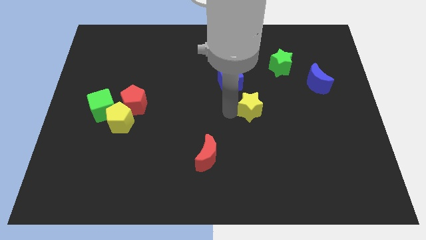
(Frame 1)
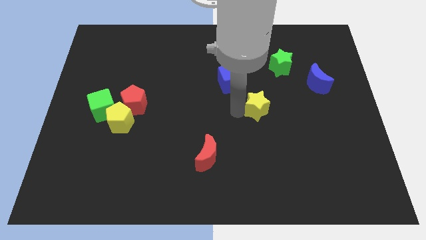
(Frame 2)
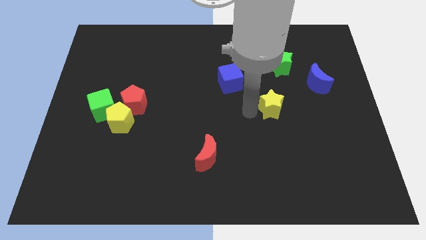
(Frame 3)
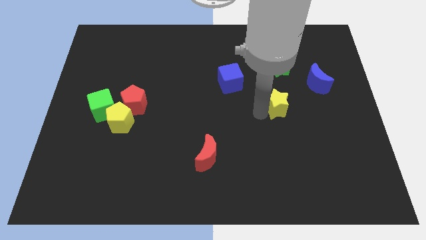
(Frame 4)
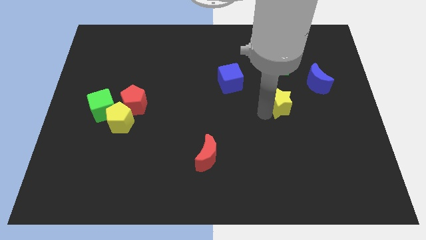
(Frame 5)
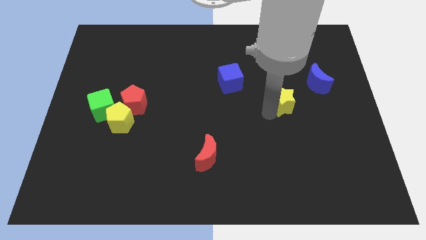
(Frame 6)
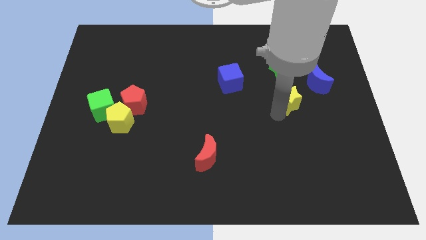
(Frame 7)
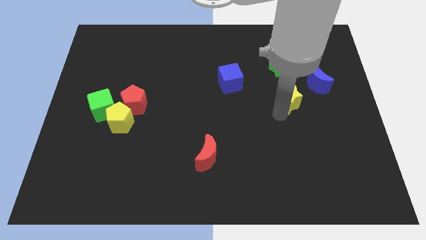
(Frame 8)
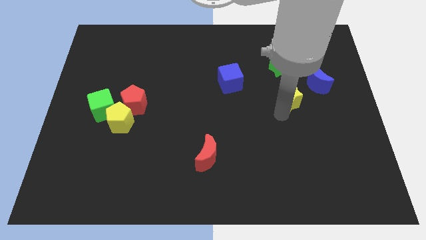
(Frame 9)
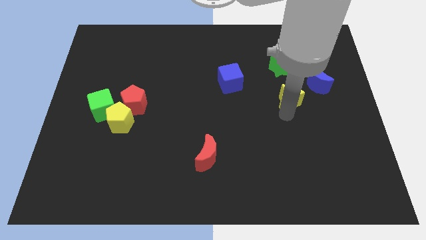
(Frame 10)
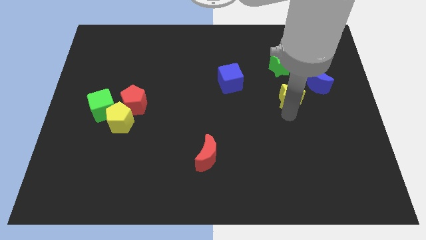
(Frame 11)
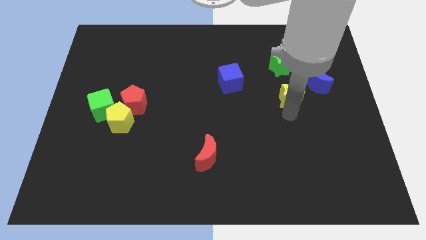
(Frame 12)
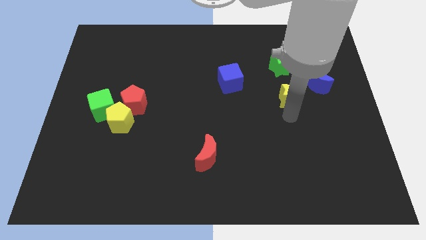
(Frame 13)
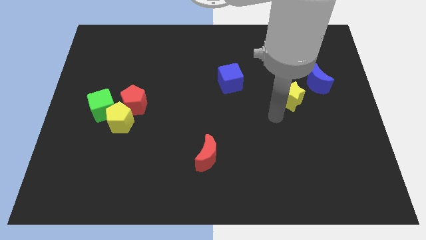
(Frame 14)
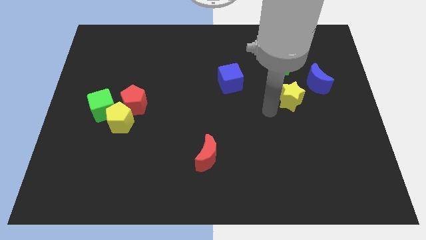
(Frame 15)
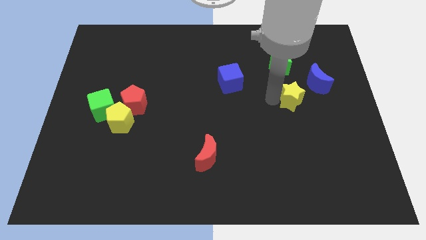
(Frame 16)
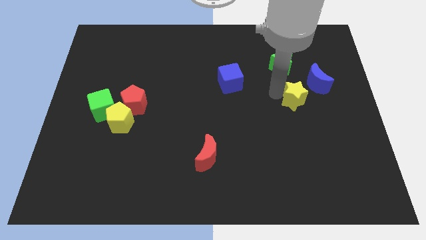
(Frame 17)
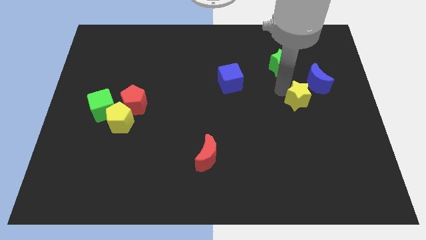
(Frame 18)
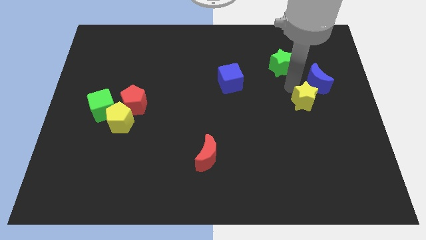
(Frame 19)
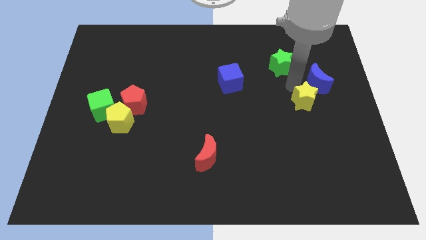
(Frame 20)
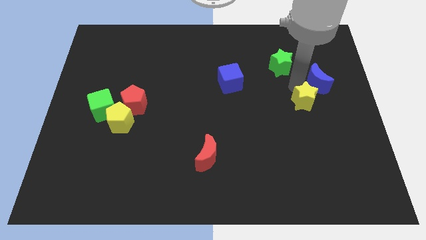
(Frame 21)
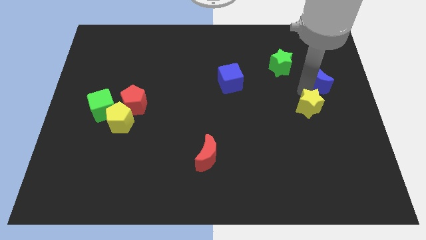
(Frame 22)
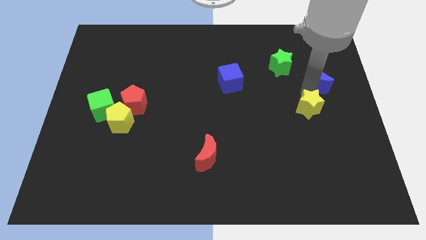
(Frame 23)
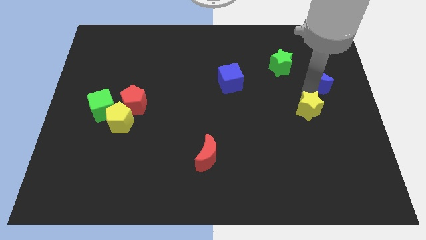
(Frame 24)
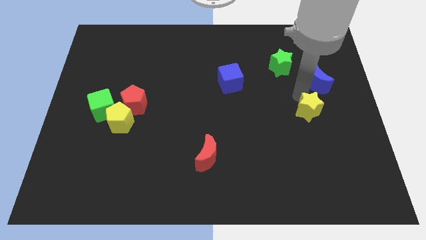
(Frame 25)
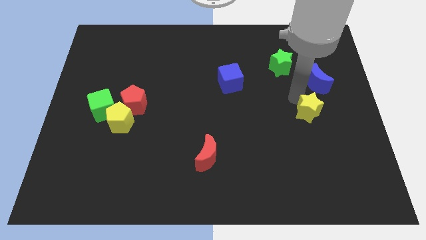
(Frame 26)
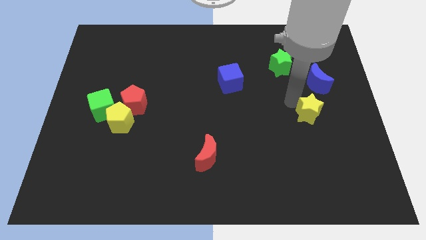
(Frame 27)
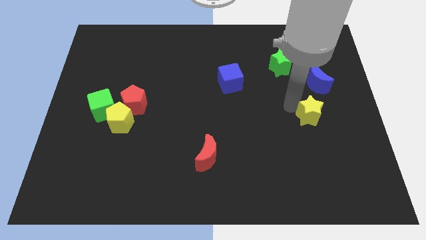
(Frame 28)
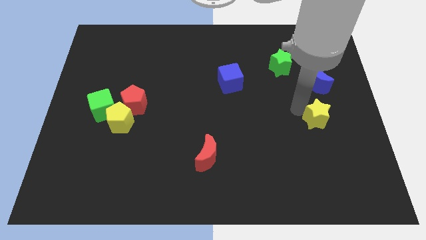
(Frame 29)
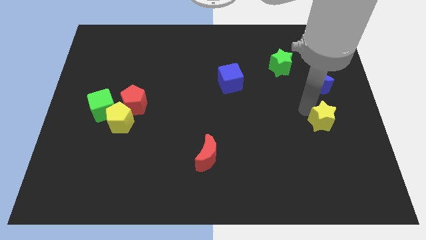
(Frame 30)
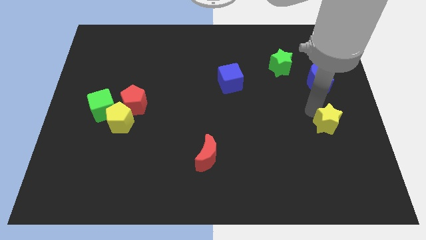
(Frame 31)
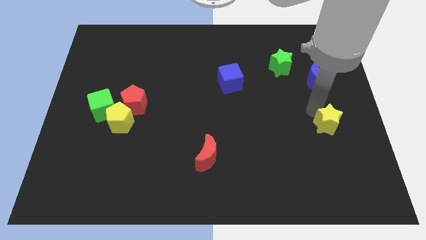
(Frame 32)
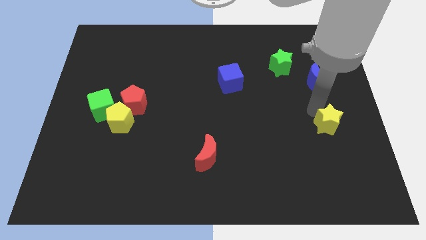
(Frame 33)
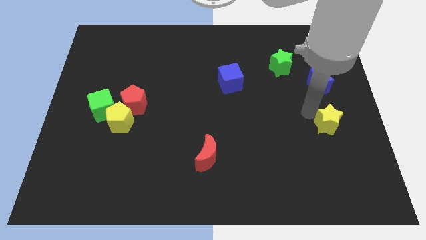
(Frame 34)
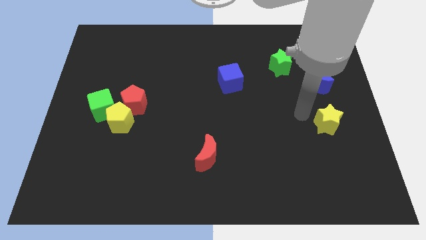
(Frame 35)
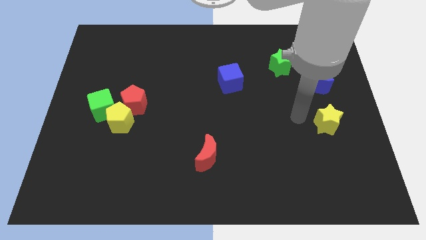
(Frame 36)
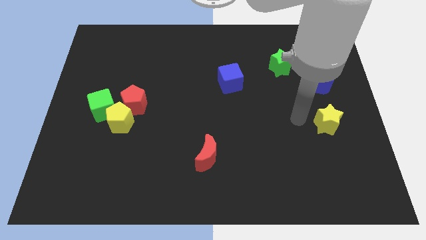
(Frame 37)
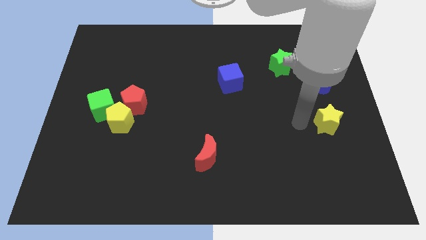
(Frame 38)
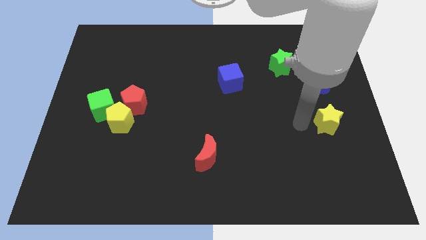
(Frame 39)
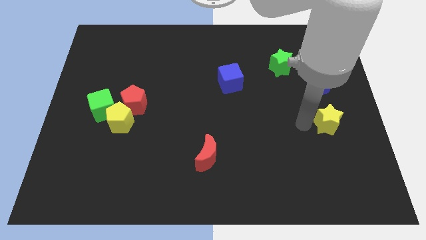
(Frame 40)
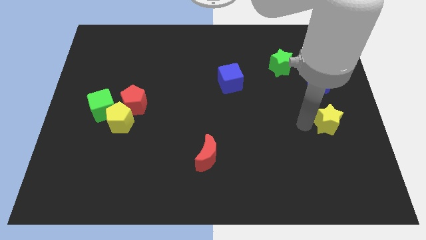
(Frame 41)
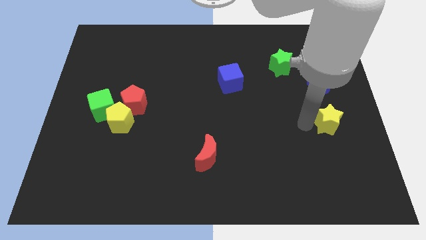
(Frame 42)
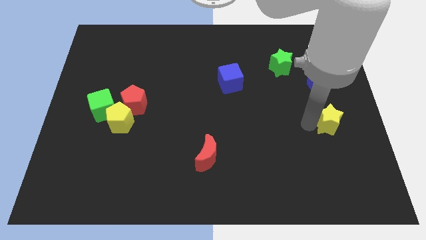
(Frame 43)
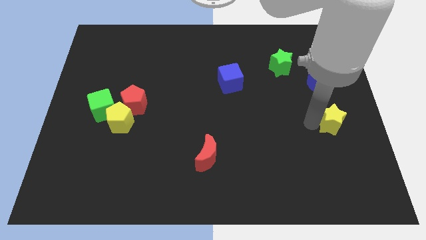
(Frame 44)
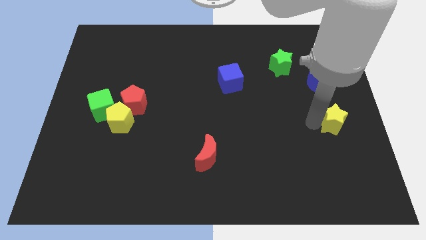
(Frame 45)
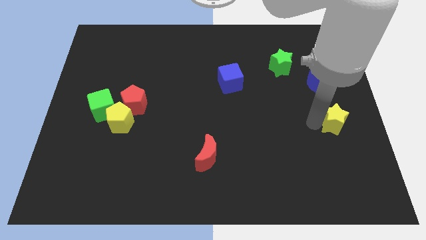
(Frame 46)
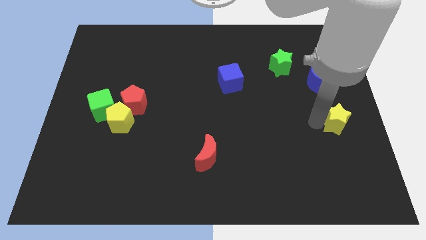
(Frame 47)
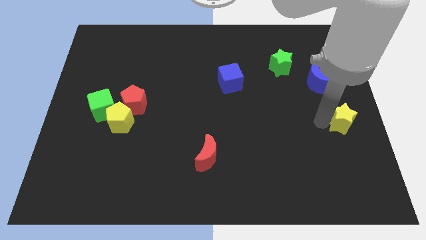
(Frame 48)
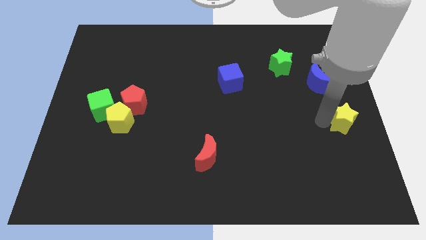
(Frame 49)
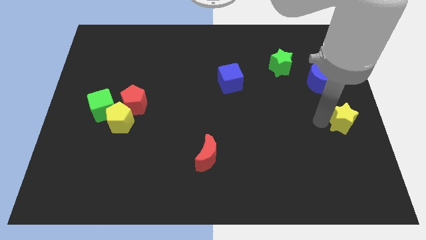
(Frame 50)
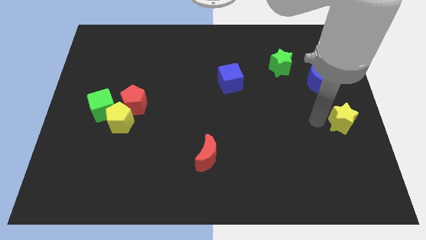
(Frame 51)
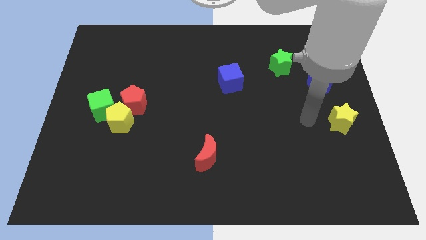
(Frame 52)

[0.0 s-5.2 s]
push the yellow star towards the right center of the board

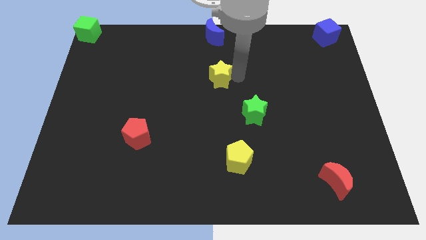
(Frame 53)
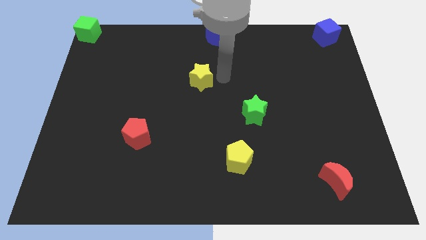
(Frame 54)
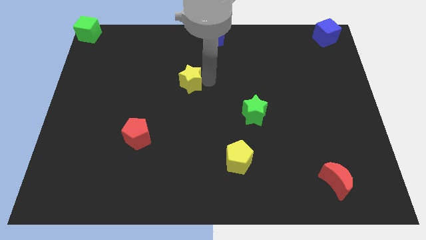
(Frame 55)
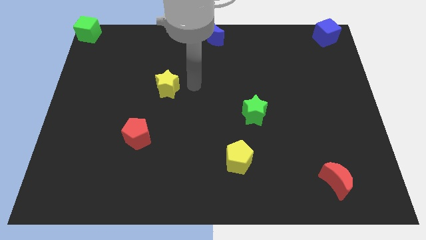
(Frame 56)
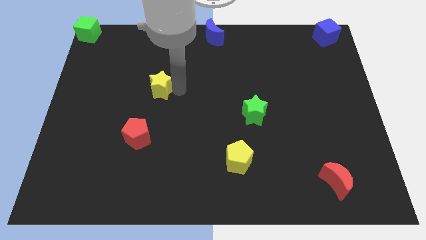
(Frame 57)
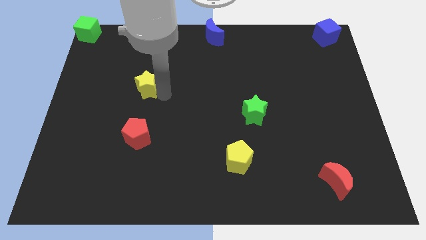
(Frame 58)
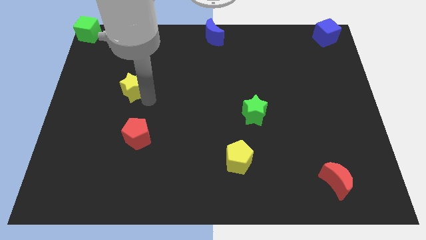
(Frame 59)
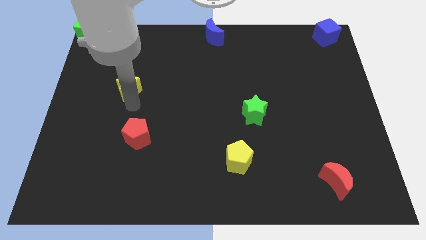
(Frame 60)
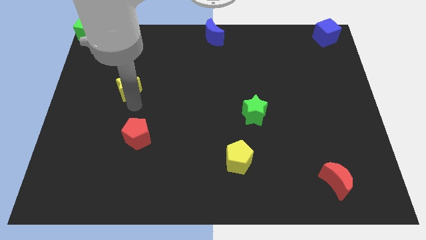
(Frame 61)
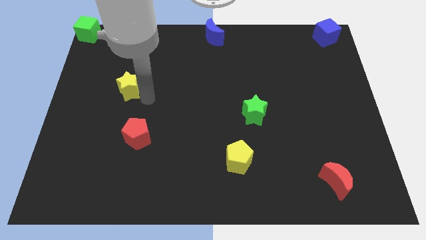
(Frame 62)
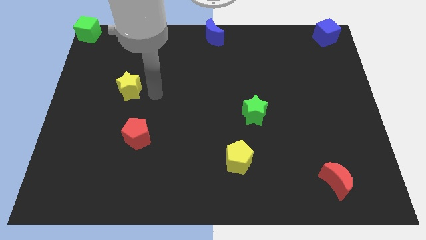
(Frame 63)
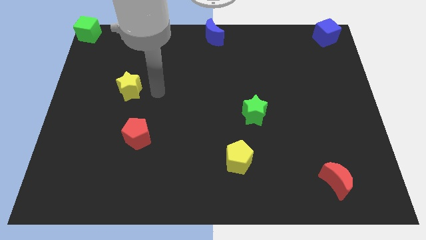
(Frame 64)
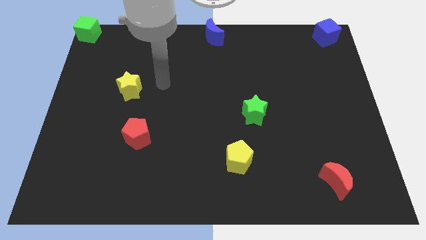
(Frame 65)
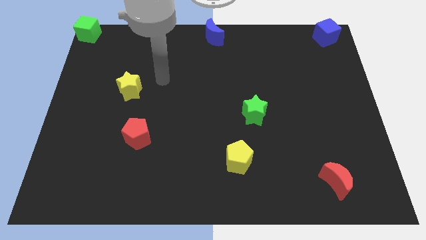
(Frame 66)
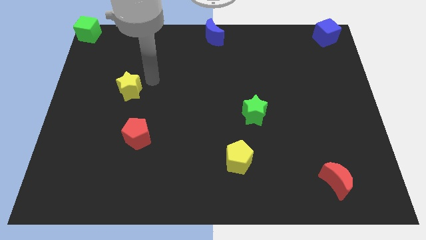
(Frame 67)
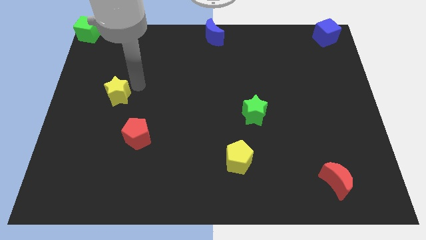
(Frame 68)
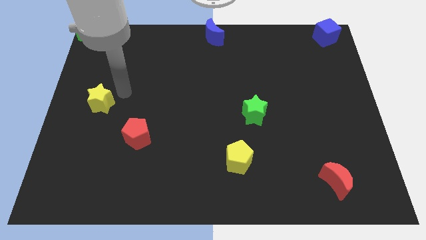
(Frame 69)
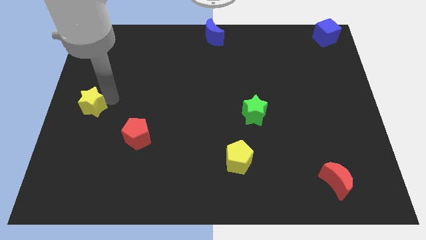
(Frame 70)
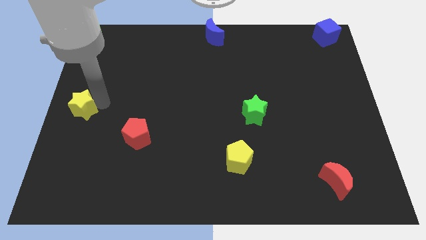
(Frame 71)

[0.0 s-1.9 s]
drag the yellow star to the left side

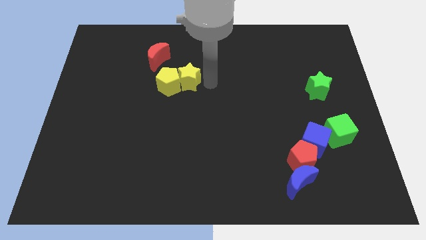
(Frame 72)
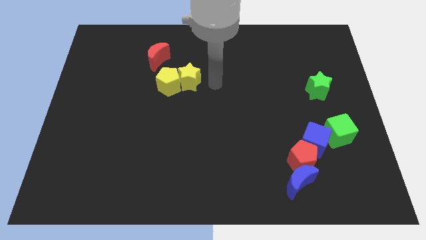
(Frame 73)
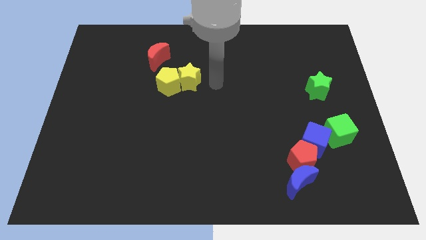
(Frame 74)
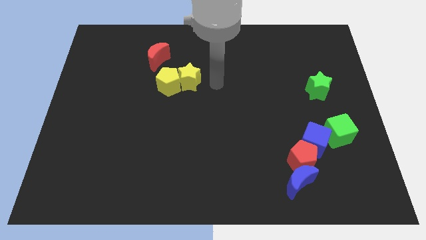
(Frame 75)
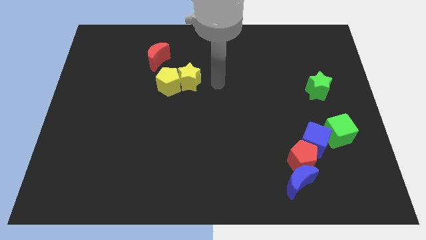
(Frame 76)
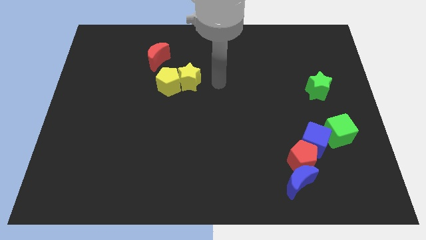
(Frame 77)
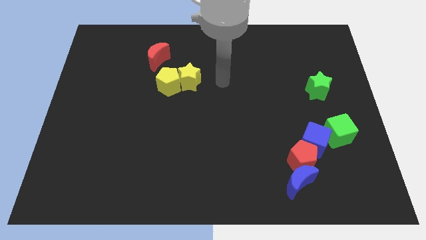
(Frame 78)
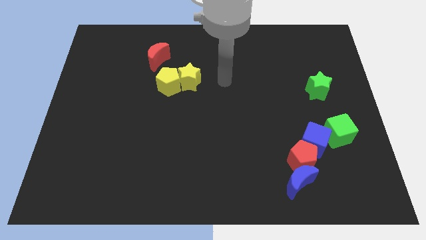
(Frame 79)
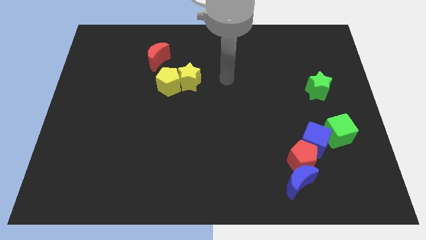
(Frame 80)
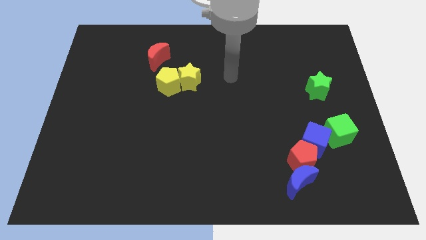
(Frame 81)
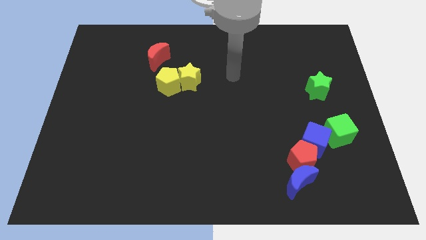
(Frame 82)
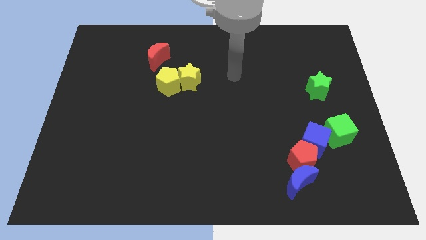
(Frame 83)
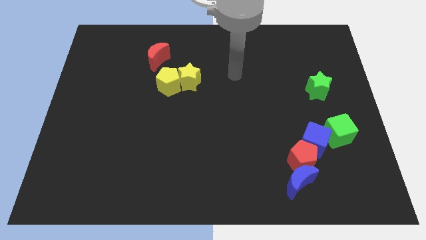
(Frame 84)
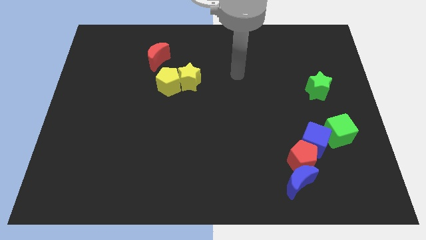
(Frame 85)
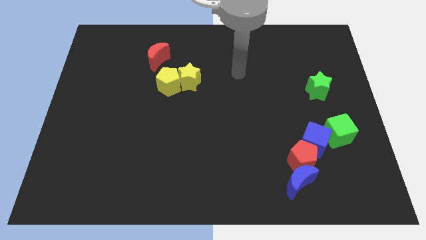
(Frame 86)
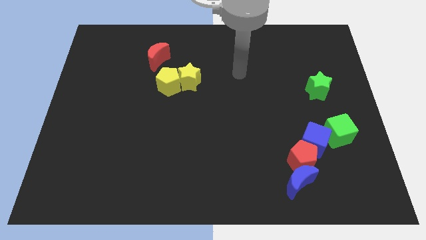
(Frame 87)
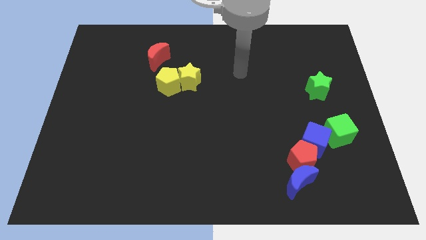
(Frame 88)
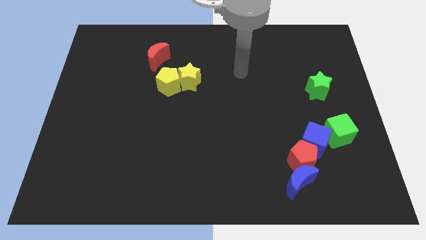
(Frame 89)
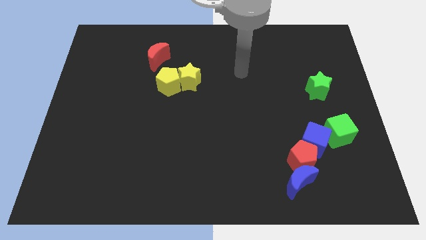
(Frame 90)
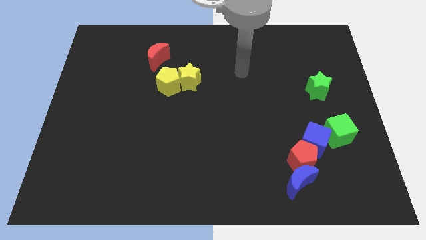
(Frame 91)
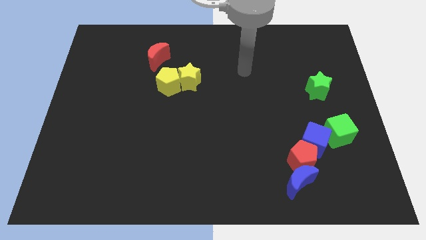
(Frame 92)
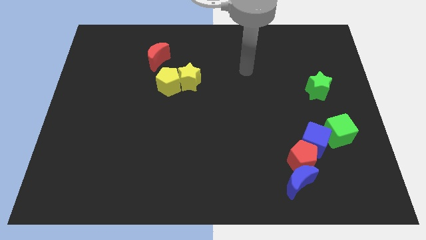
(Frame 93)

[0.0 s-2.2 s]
move your arm towards the top side of the board
